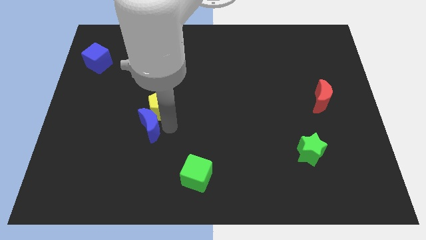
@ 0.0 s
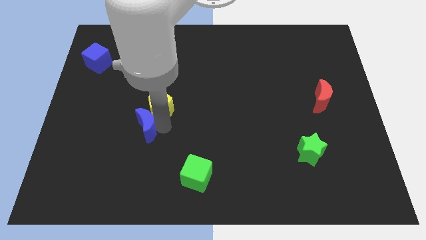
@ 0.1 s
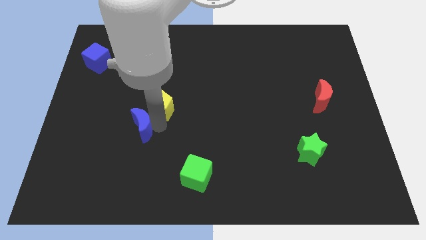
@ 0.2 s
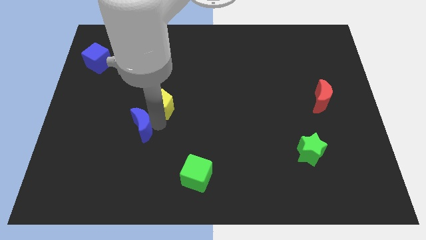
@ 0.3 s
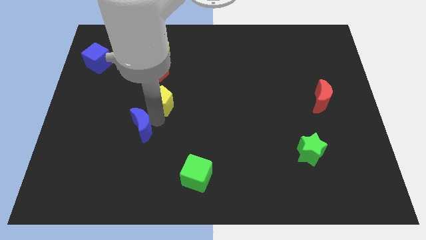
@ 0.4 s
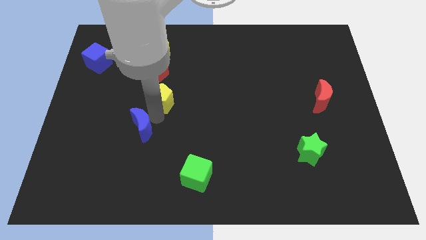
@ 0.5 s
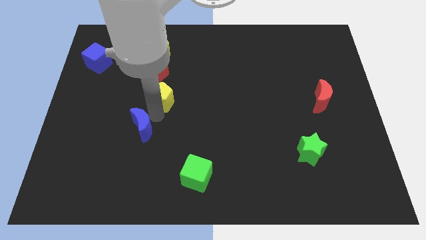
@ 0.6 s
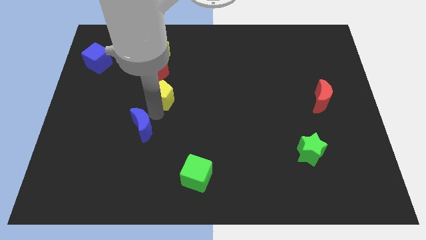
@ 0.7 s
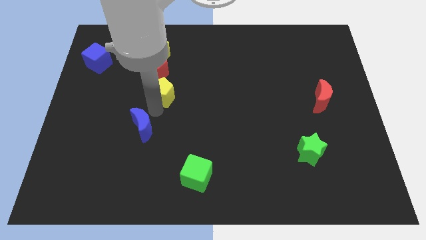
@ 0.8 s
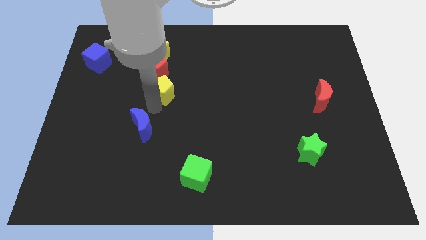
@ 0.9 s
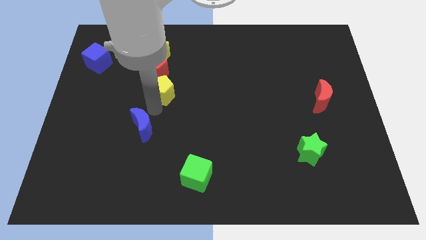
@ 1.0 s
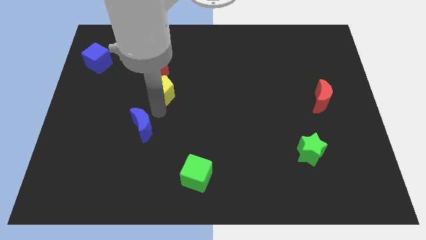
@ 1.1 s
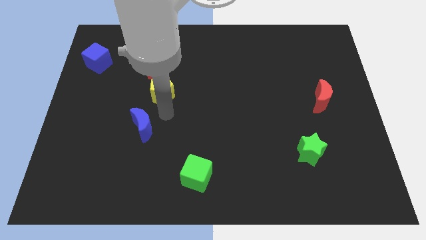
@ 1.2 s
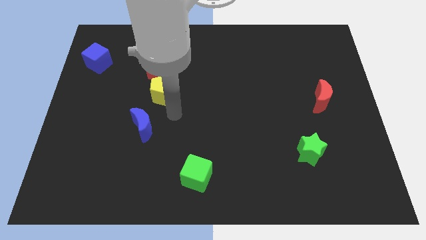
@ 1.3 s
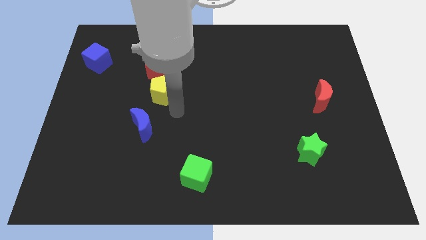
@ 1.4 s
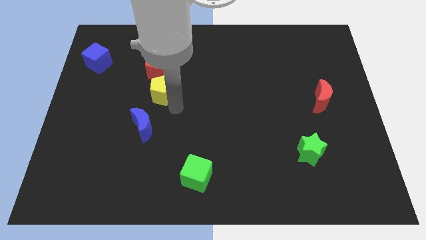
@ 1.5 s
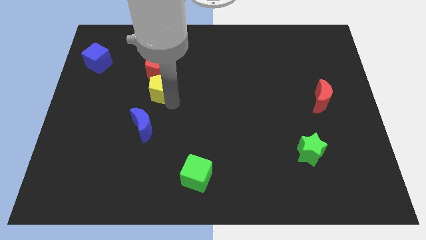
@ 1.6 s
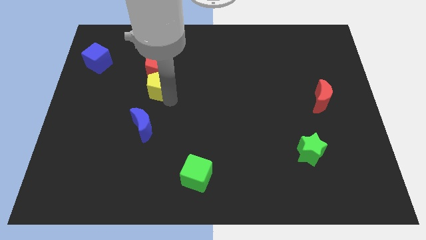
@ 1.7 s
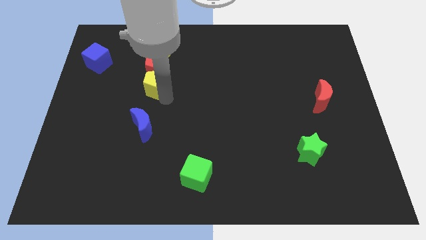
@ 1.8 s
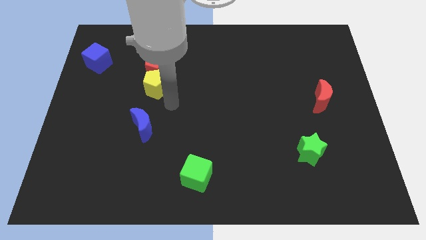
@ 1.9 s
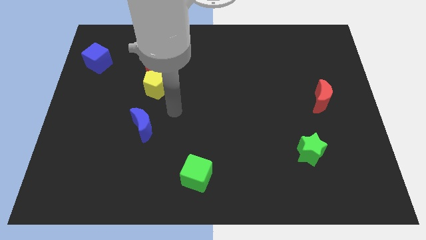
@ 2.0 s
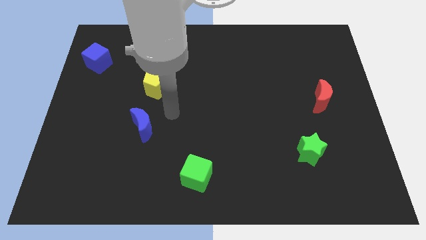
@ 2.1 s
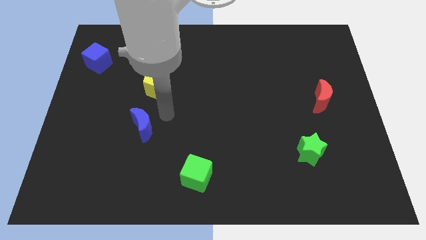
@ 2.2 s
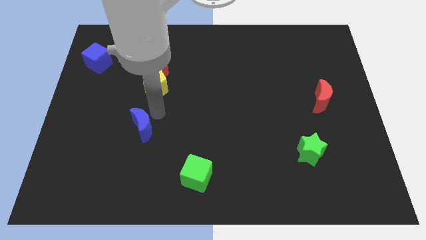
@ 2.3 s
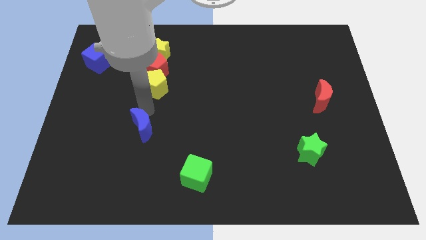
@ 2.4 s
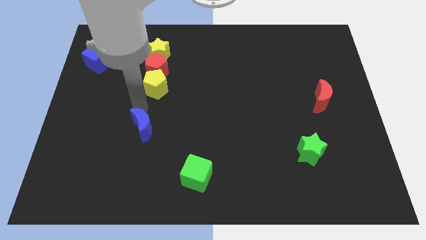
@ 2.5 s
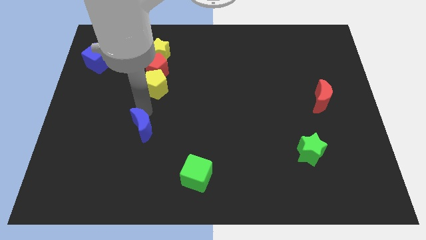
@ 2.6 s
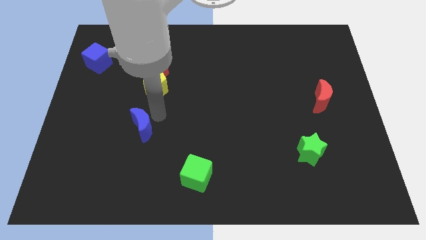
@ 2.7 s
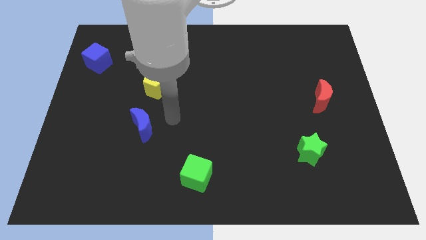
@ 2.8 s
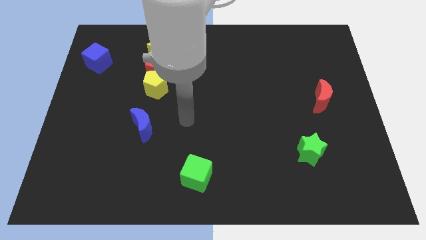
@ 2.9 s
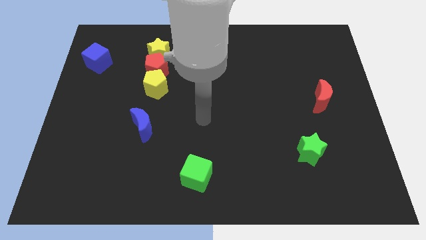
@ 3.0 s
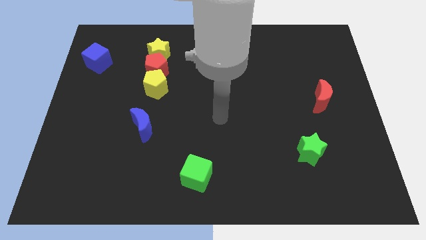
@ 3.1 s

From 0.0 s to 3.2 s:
move the yellow pentagon towards the bottom of the red pentagon

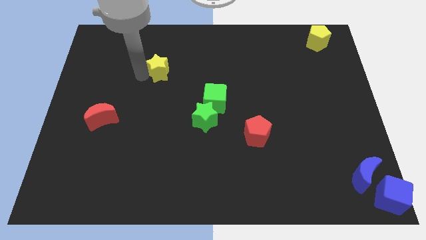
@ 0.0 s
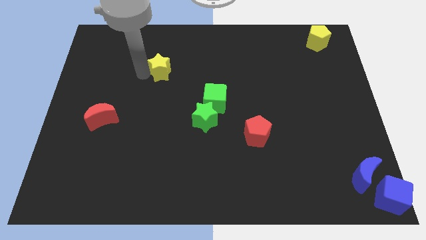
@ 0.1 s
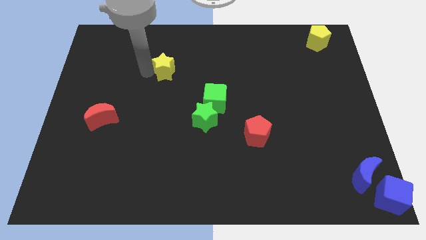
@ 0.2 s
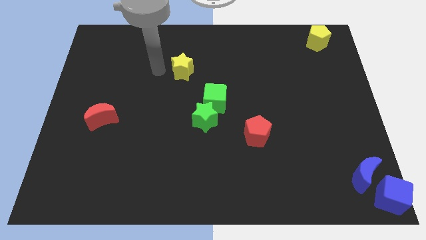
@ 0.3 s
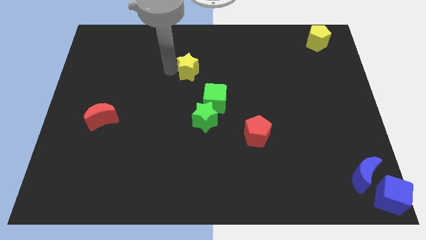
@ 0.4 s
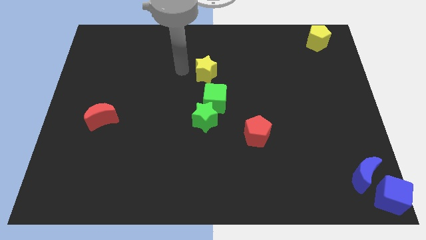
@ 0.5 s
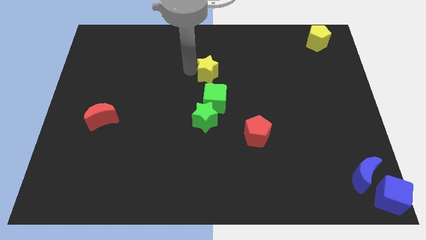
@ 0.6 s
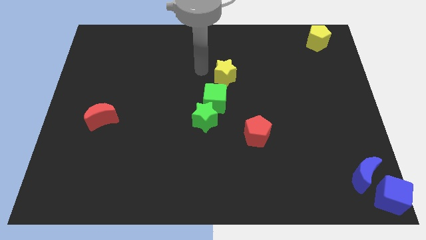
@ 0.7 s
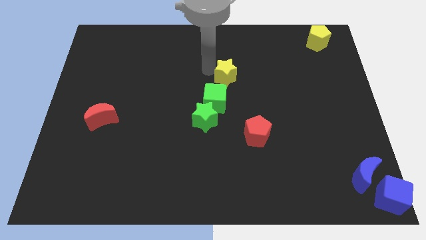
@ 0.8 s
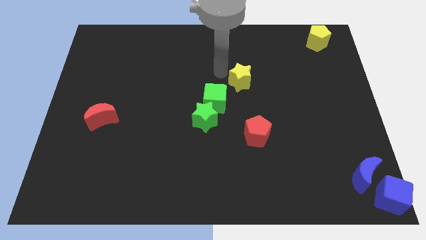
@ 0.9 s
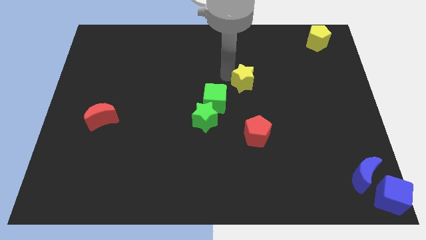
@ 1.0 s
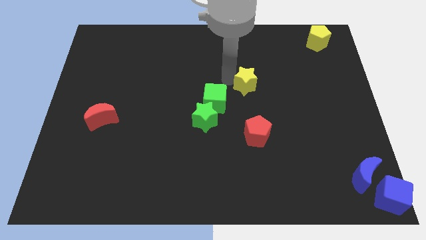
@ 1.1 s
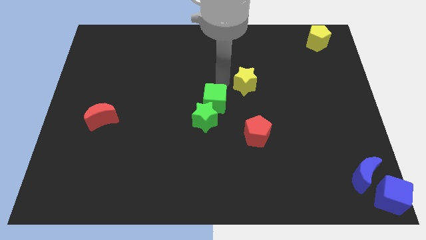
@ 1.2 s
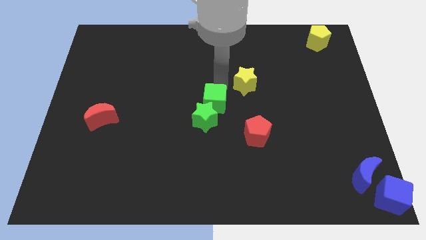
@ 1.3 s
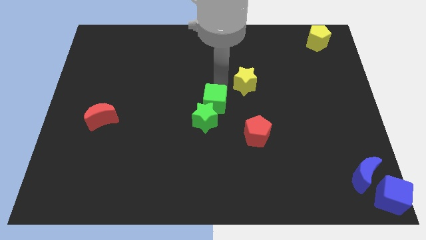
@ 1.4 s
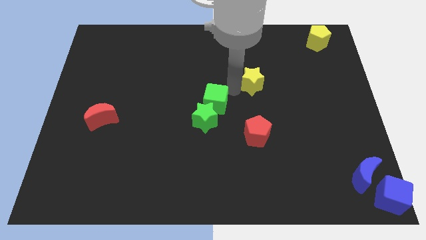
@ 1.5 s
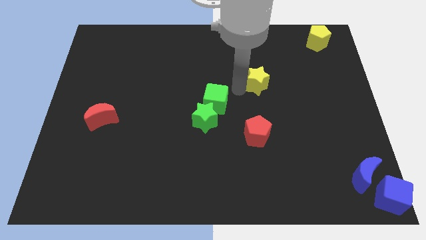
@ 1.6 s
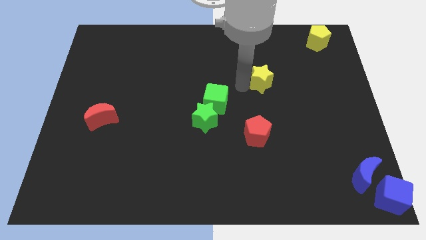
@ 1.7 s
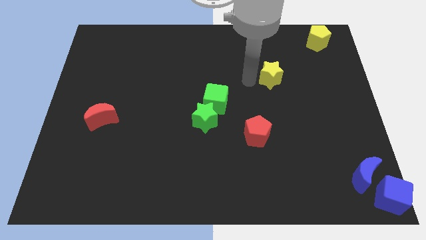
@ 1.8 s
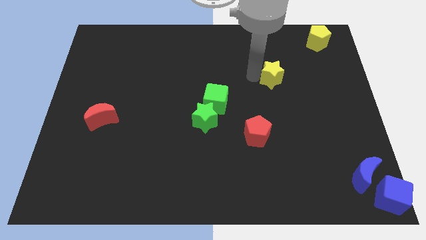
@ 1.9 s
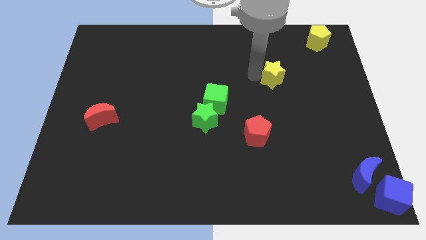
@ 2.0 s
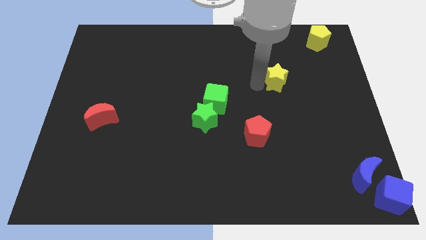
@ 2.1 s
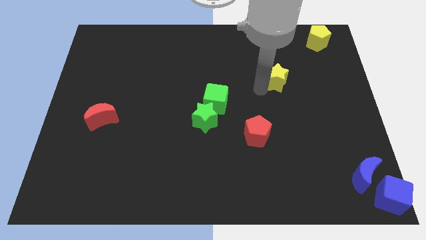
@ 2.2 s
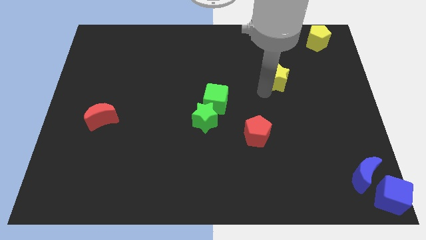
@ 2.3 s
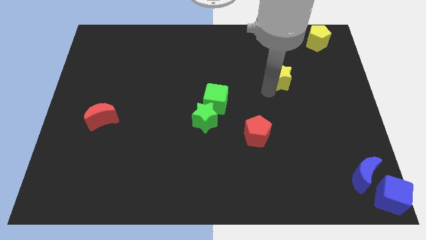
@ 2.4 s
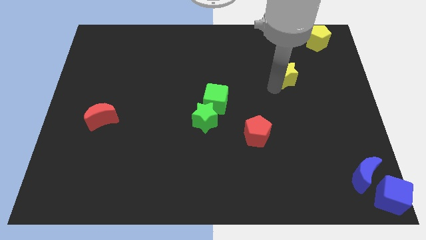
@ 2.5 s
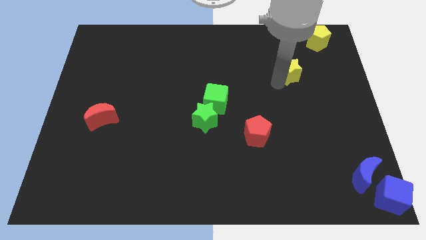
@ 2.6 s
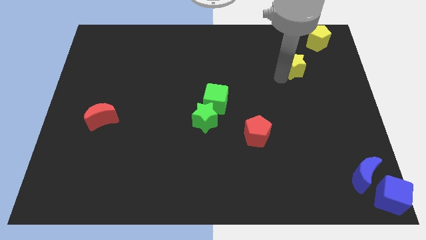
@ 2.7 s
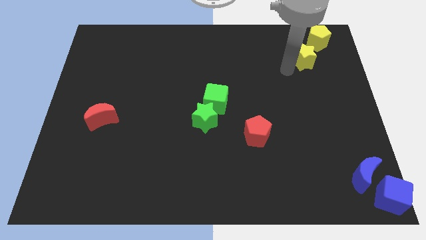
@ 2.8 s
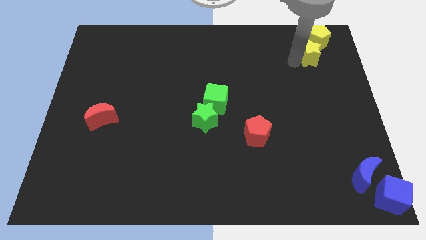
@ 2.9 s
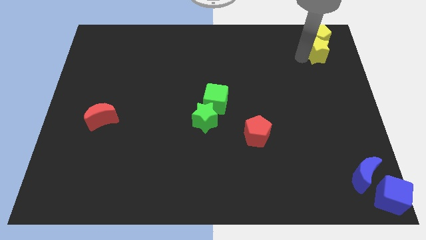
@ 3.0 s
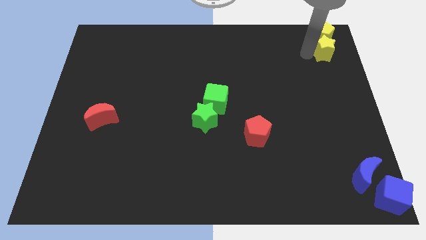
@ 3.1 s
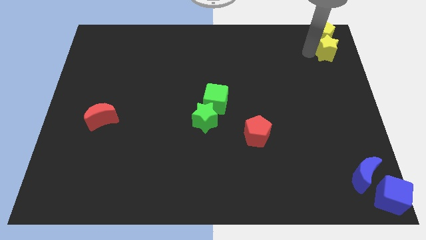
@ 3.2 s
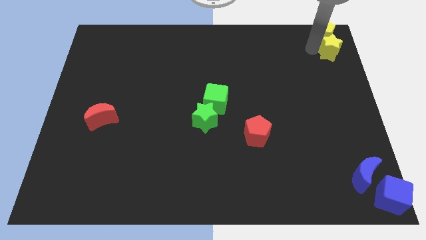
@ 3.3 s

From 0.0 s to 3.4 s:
place yellow star below yellow pentagon

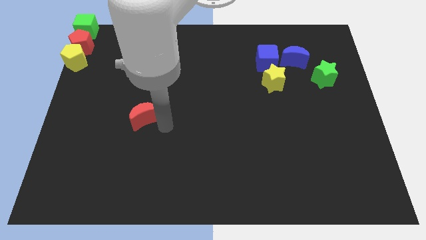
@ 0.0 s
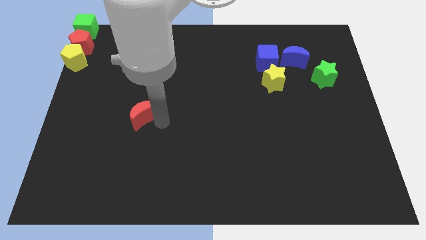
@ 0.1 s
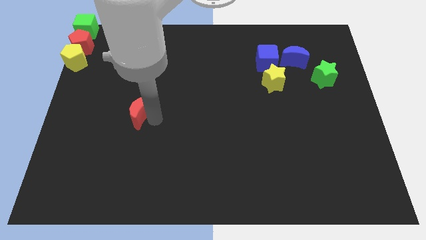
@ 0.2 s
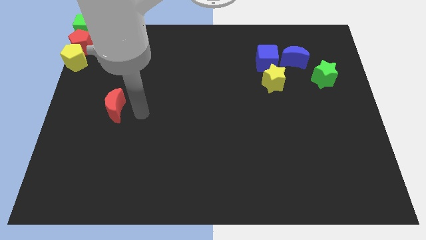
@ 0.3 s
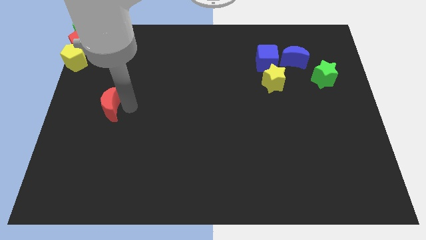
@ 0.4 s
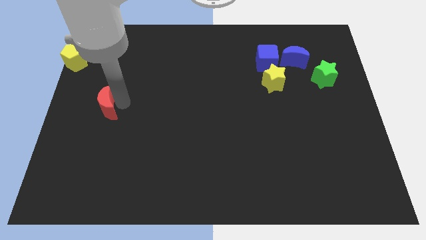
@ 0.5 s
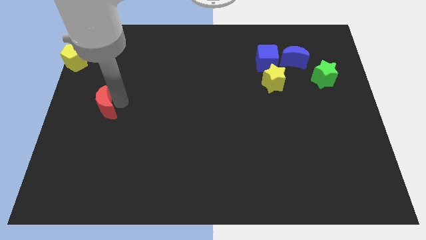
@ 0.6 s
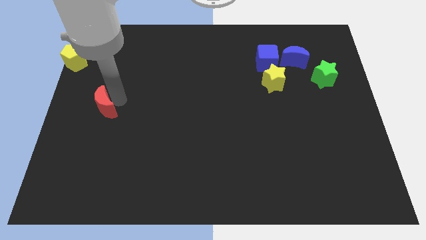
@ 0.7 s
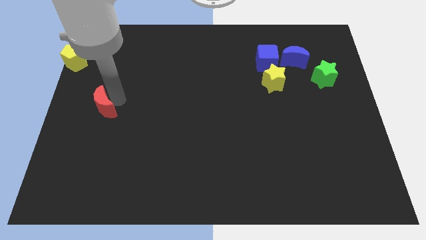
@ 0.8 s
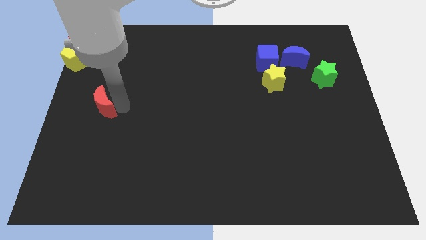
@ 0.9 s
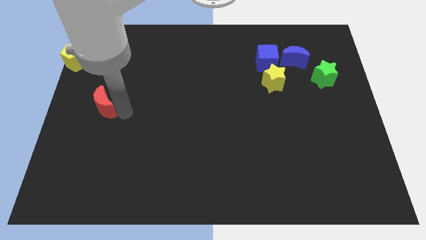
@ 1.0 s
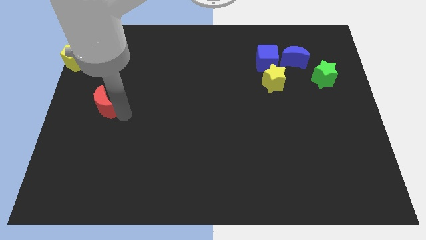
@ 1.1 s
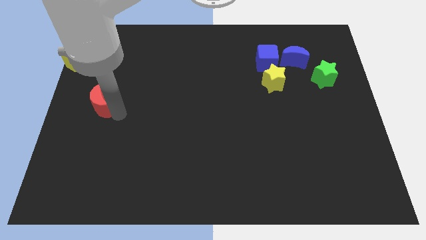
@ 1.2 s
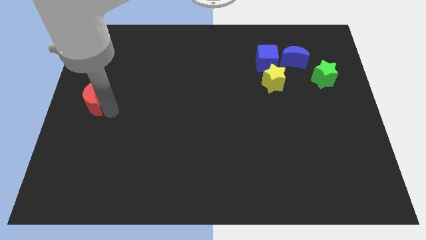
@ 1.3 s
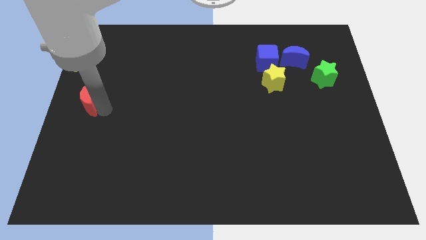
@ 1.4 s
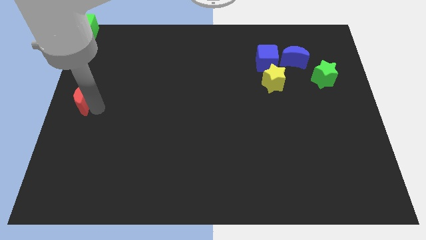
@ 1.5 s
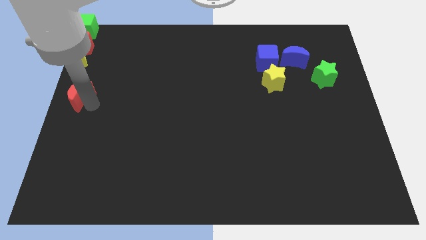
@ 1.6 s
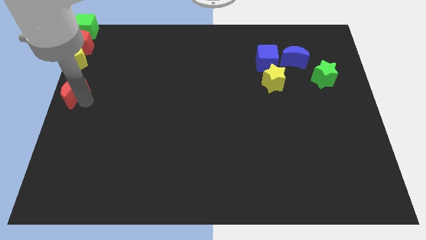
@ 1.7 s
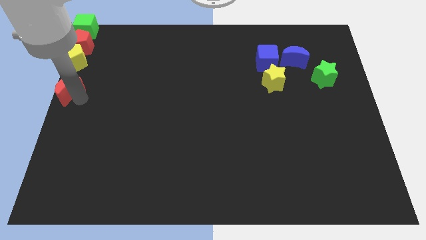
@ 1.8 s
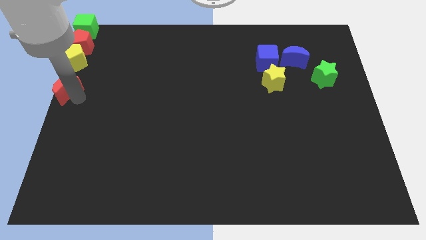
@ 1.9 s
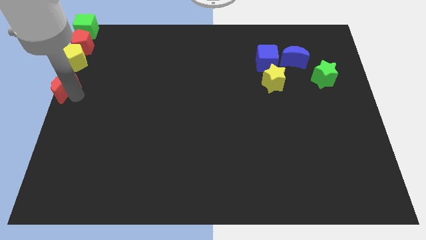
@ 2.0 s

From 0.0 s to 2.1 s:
place red moon towards the left centre

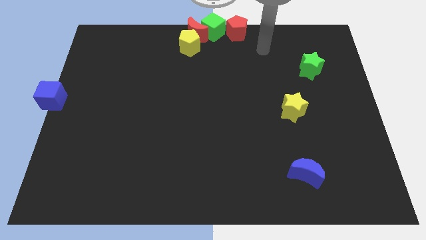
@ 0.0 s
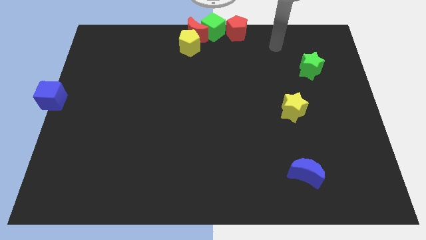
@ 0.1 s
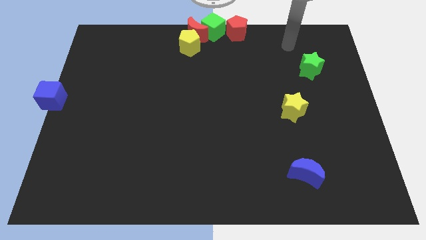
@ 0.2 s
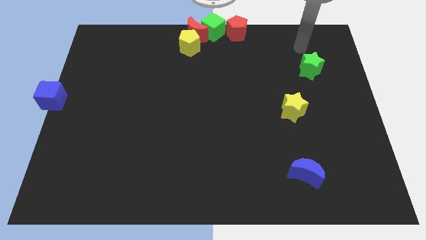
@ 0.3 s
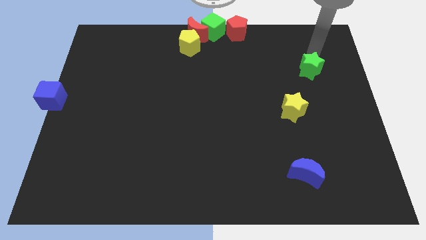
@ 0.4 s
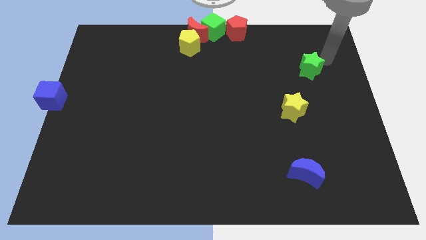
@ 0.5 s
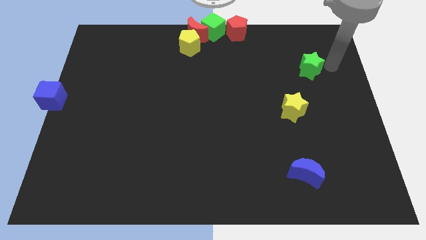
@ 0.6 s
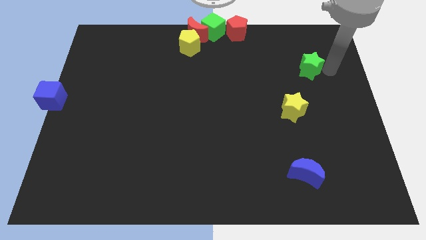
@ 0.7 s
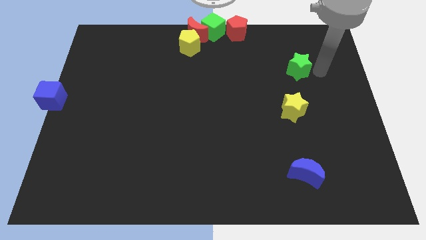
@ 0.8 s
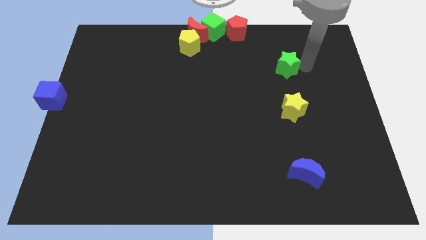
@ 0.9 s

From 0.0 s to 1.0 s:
move the arm into the green star
